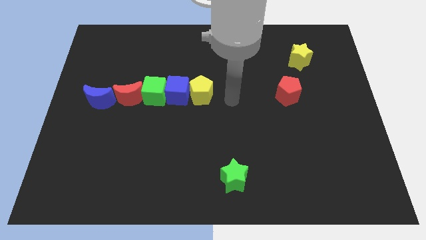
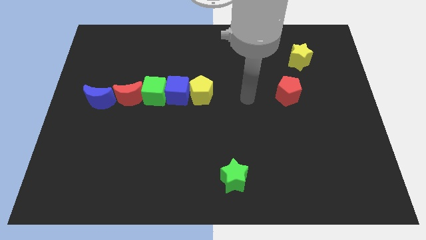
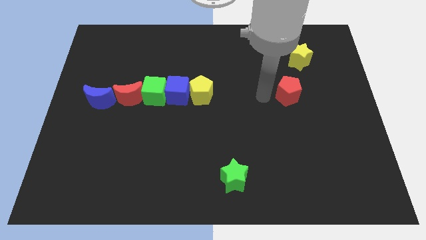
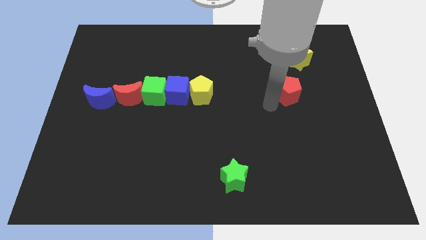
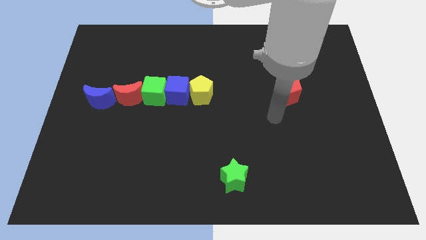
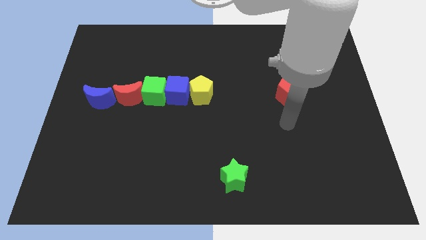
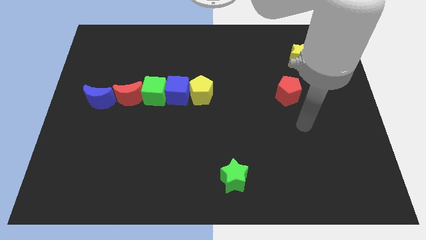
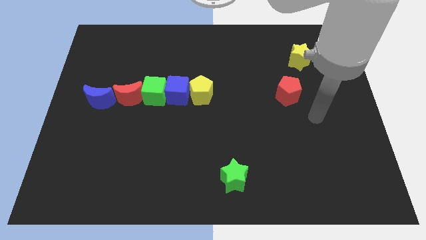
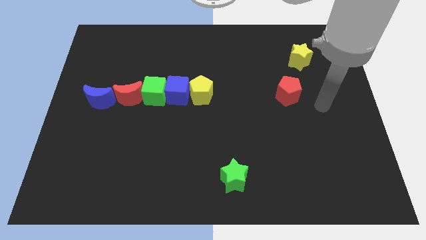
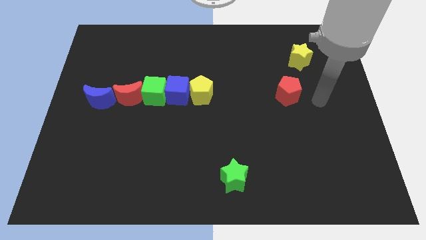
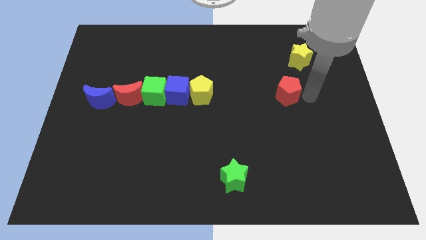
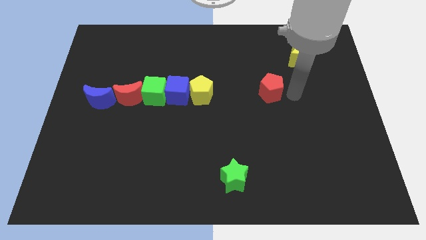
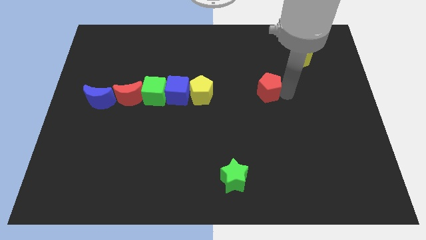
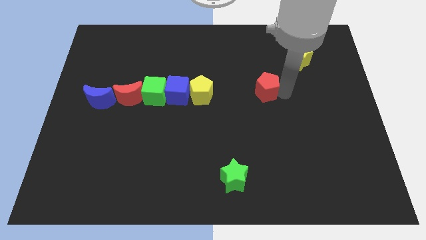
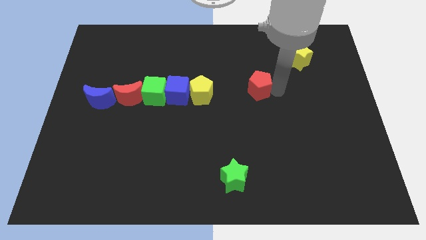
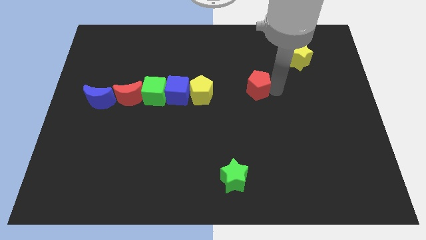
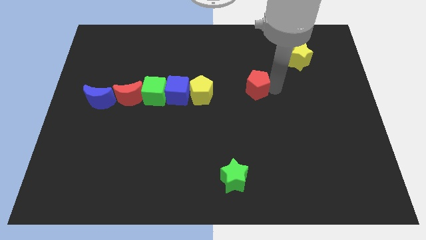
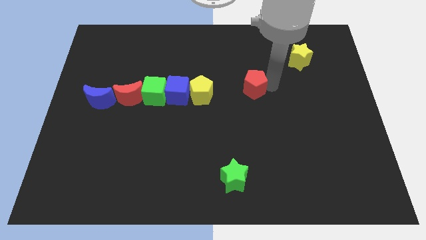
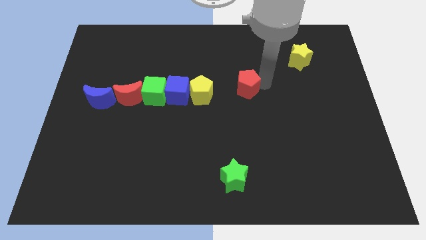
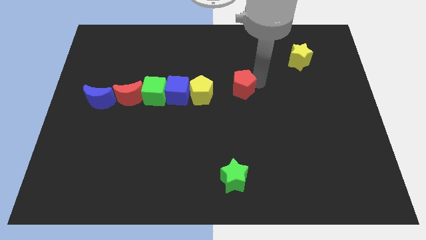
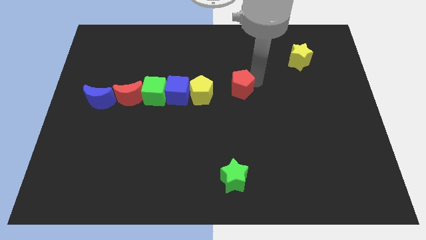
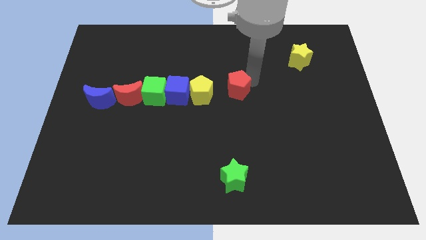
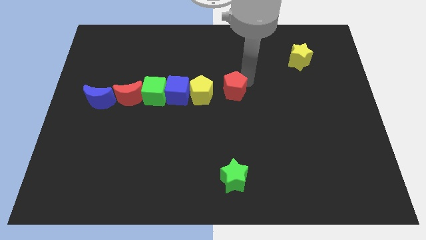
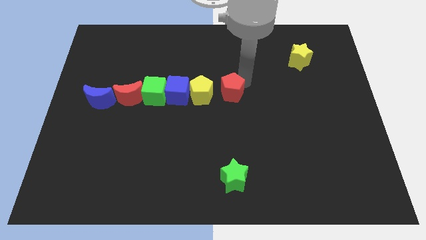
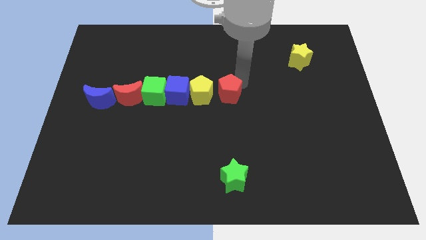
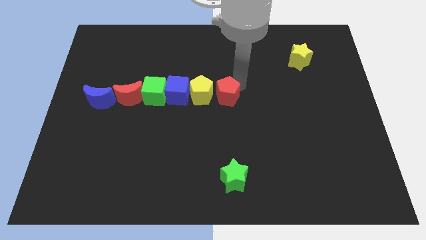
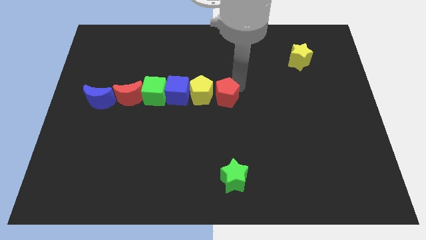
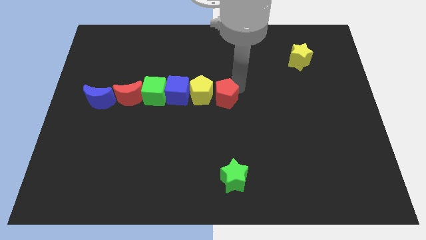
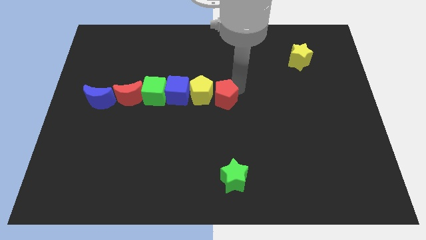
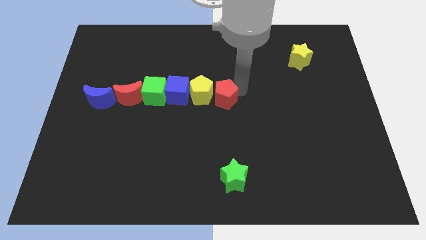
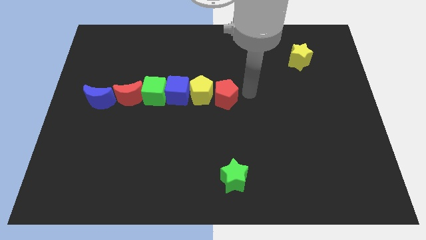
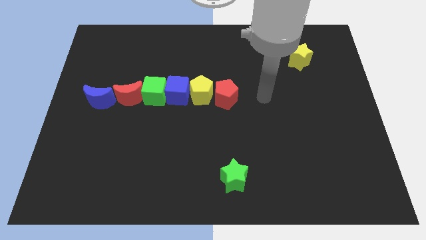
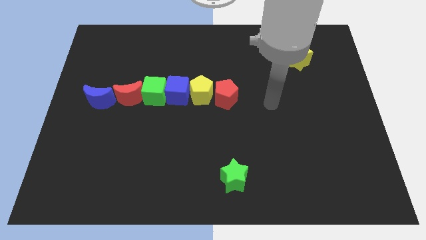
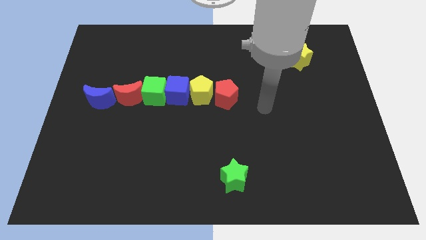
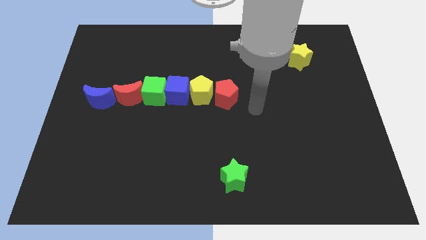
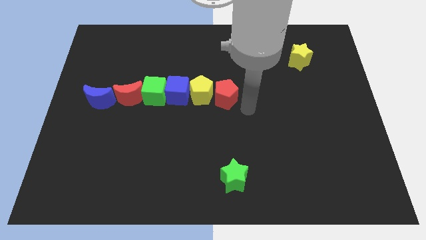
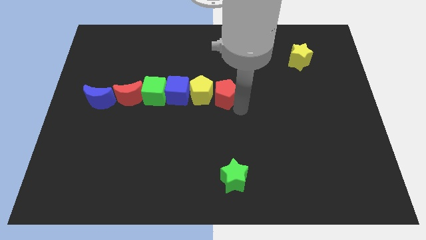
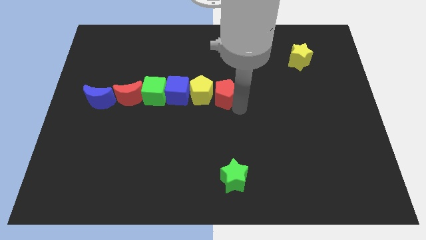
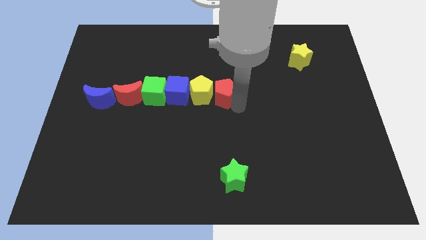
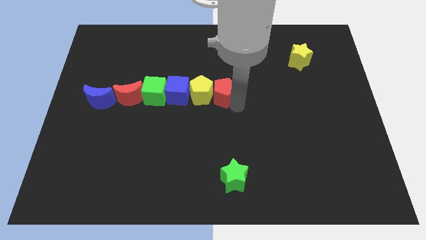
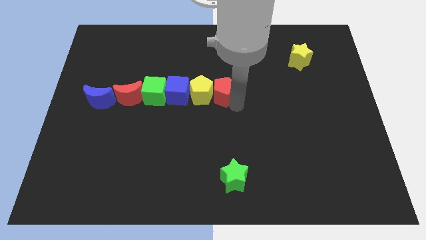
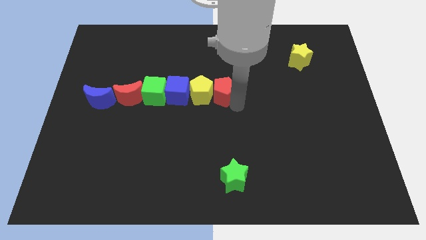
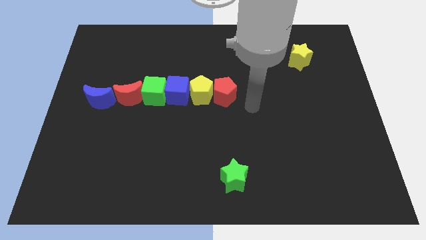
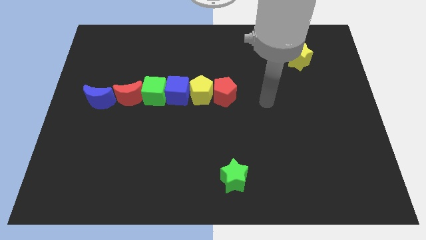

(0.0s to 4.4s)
push the red pentagon towards the yellow pentagon

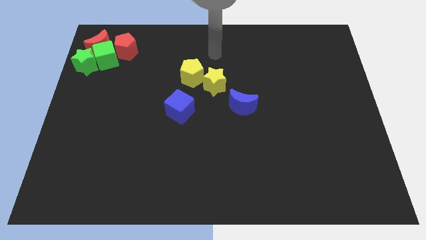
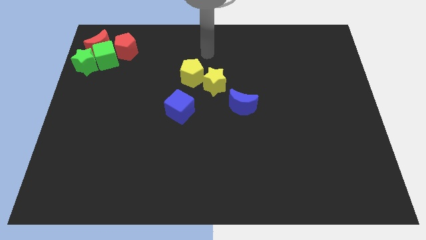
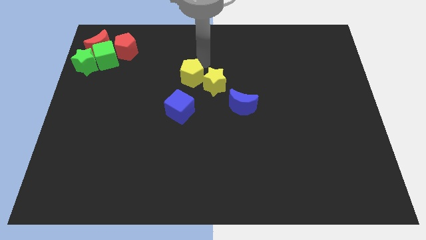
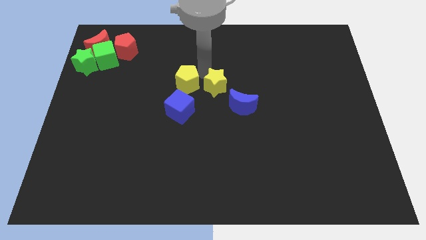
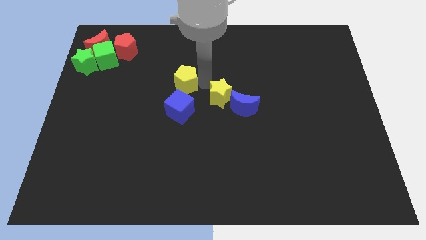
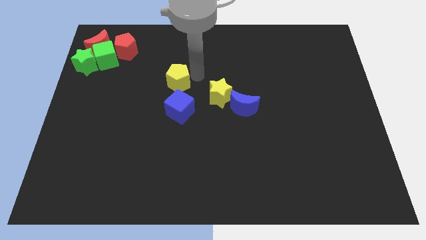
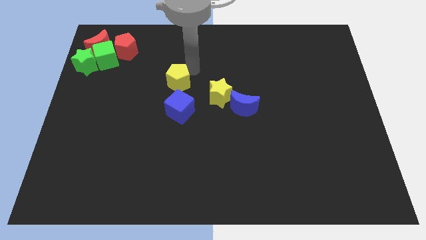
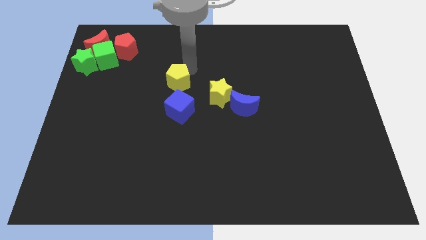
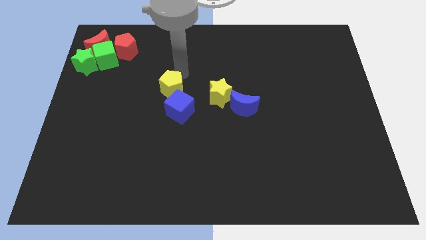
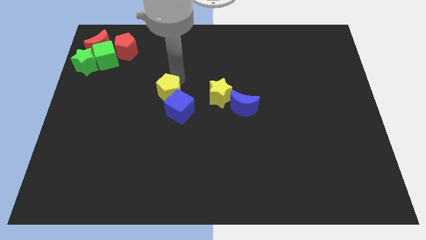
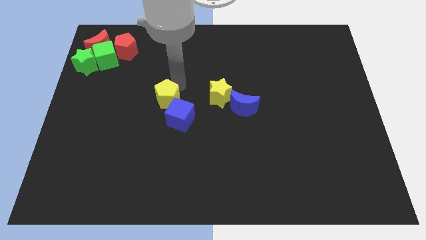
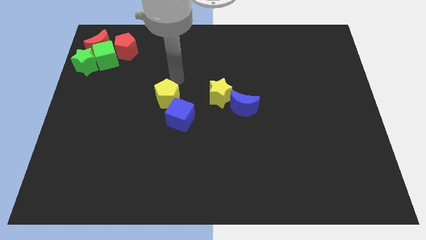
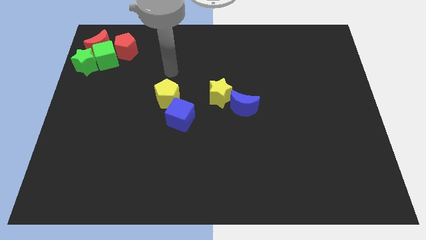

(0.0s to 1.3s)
separate yellow pentagon and the yellow star

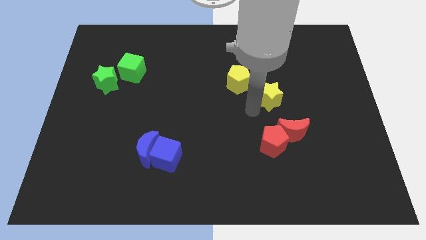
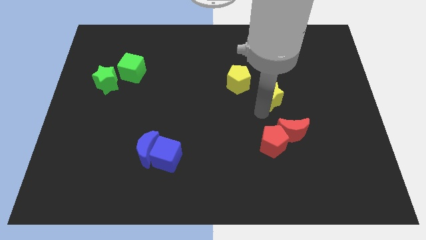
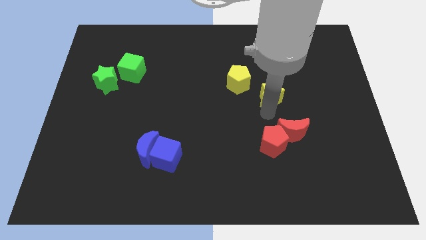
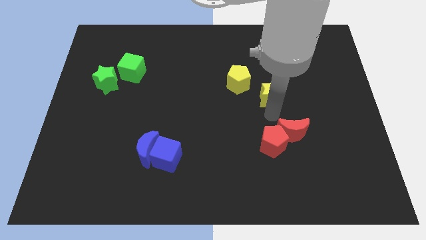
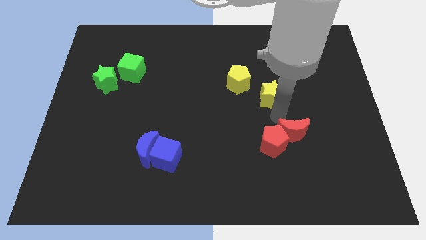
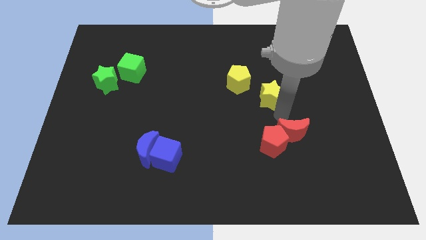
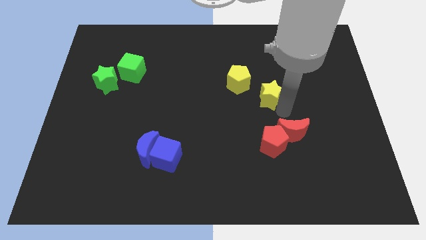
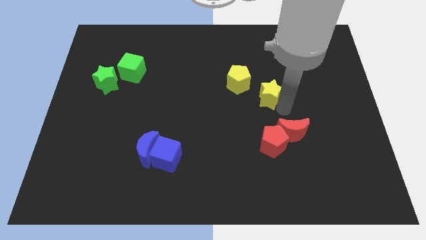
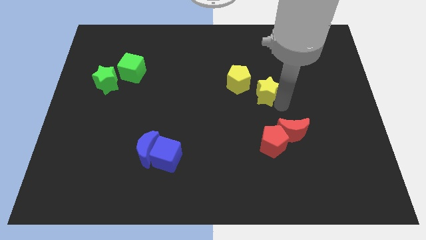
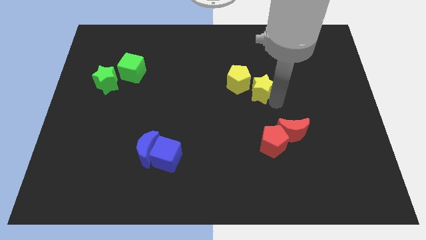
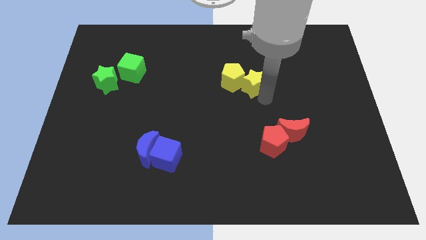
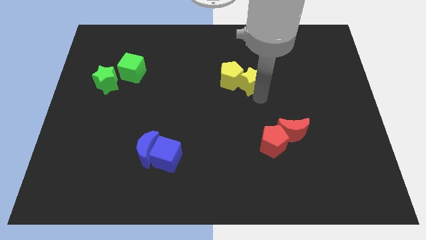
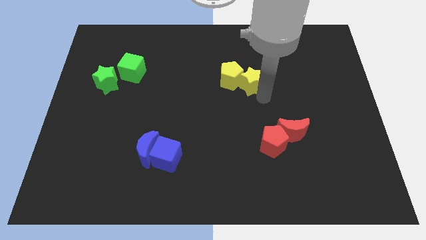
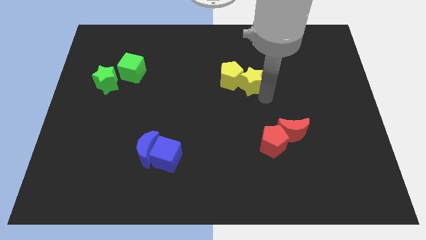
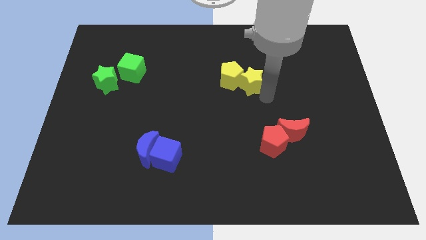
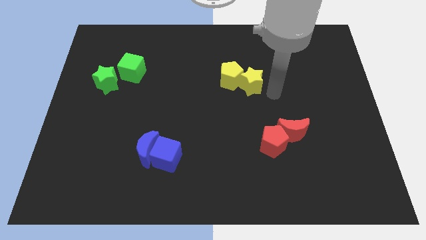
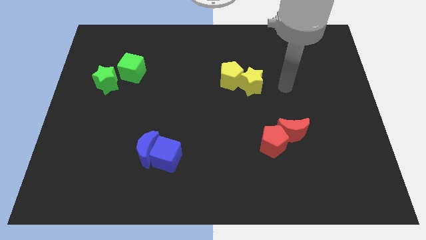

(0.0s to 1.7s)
push the star close to the yellow pentagon

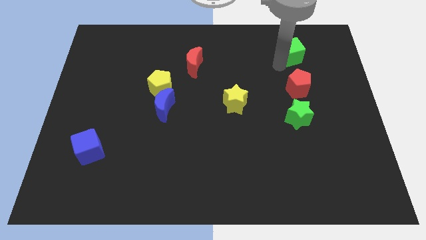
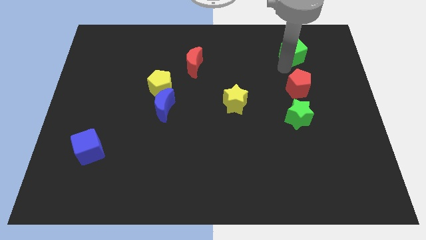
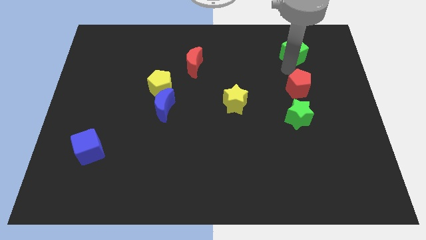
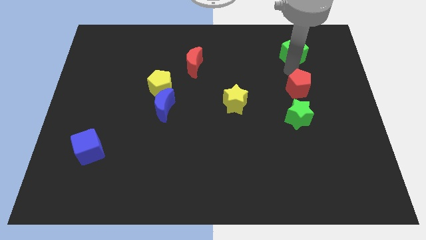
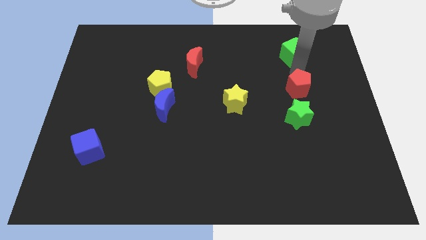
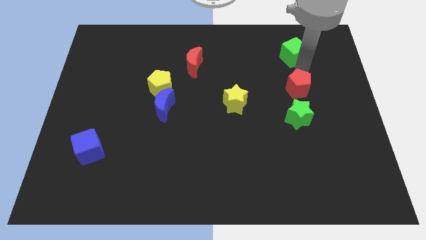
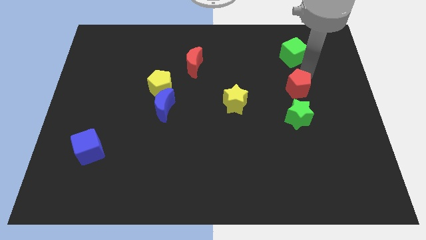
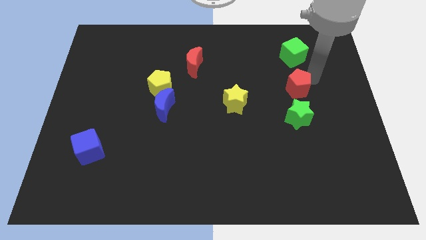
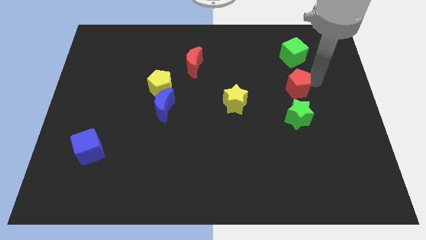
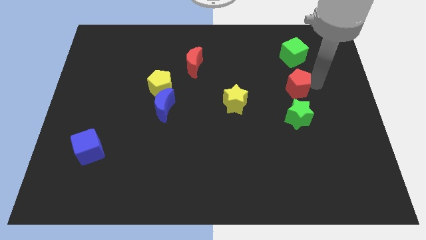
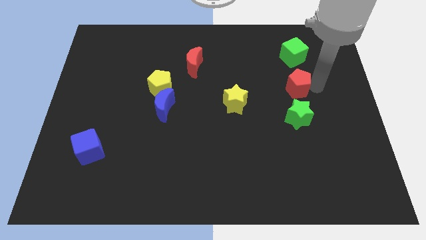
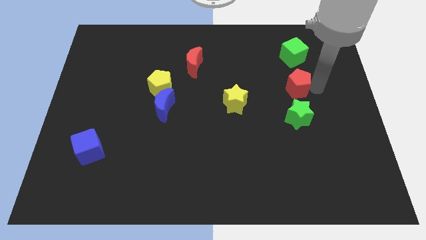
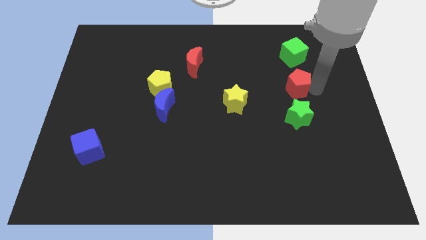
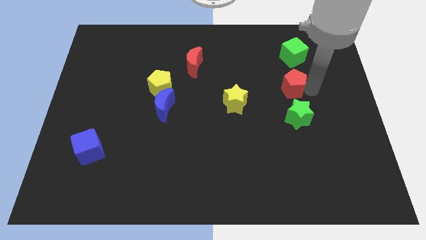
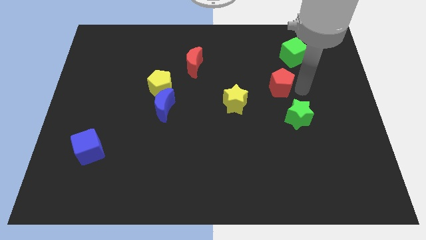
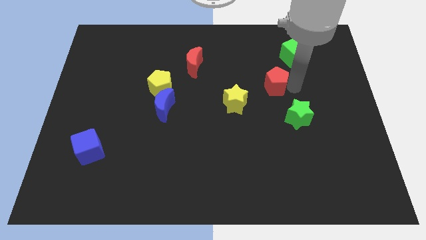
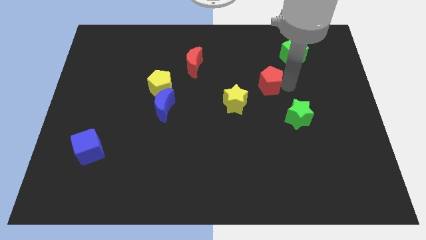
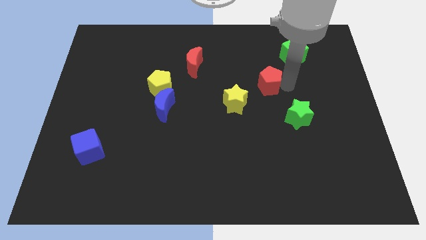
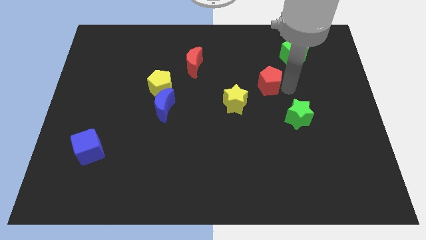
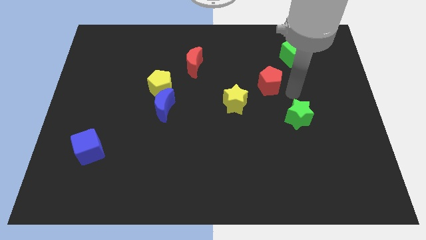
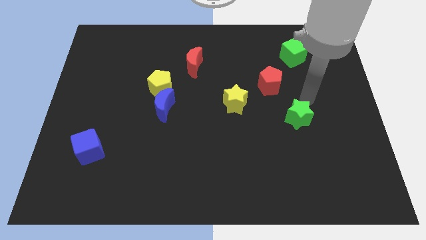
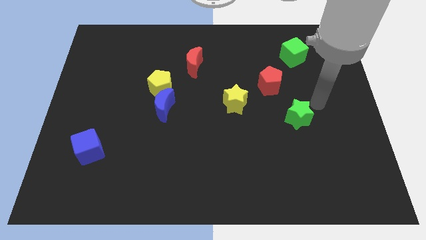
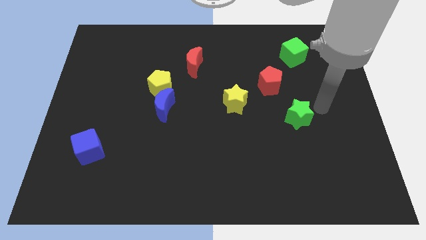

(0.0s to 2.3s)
separate the red pentagon from the vertical line of blocks
